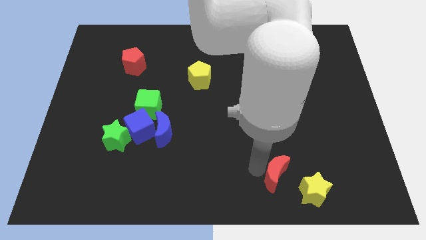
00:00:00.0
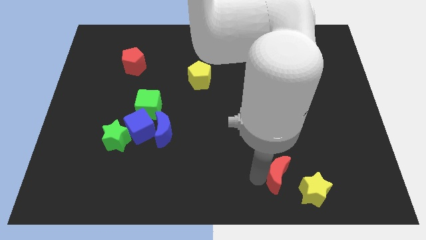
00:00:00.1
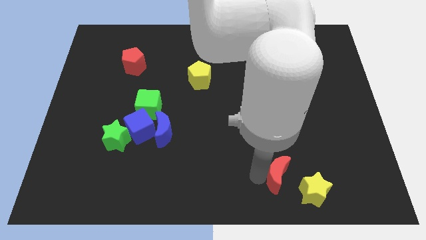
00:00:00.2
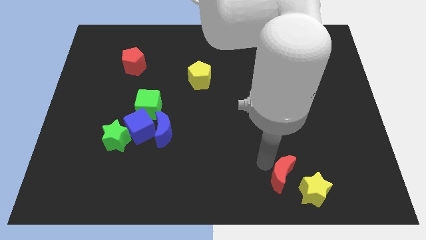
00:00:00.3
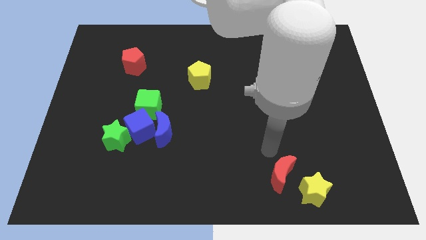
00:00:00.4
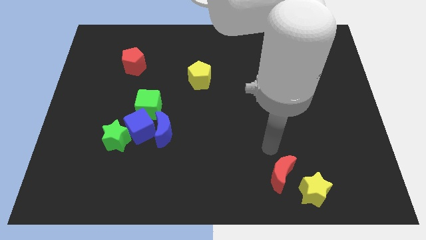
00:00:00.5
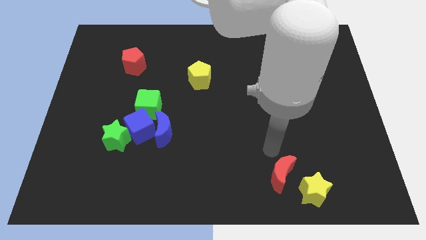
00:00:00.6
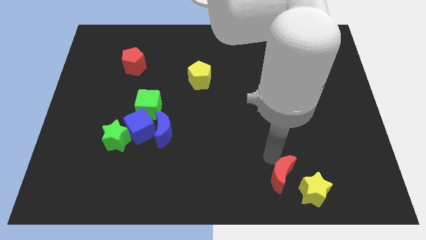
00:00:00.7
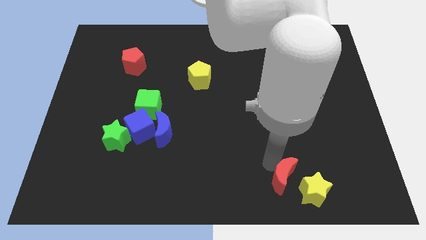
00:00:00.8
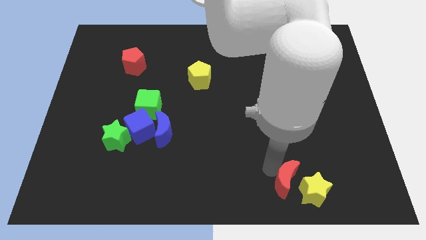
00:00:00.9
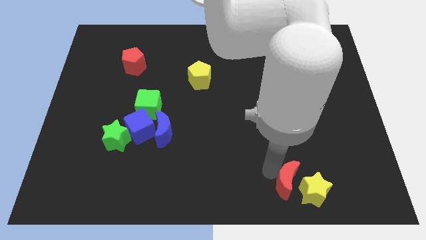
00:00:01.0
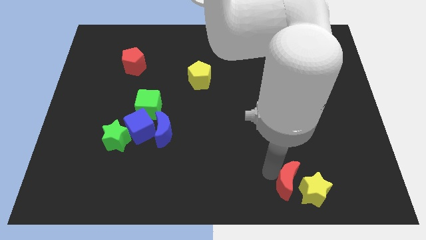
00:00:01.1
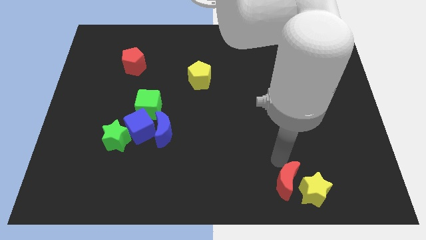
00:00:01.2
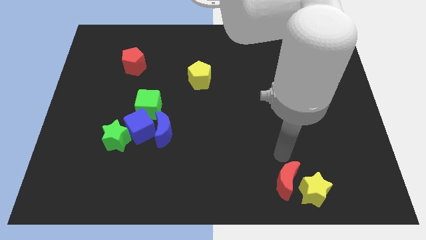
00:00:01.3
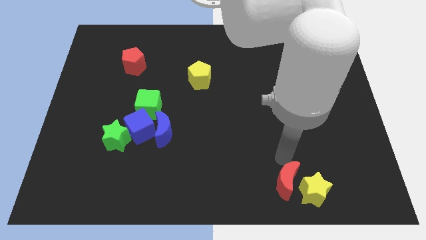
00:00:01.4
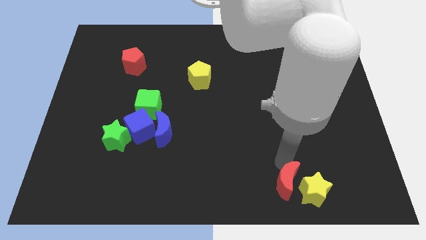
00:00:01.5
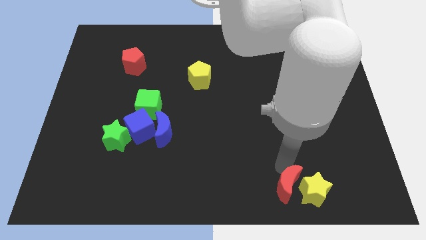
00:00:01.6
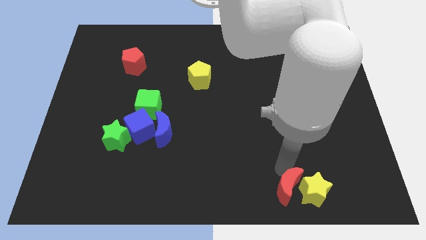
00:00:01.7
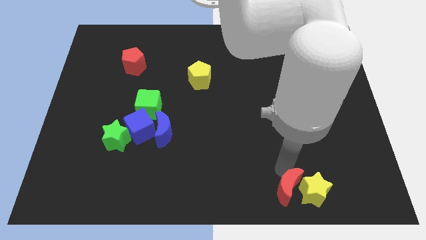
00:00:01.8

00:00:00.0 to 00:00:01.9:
move the red crescent to the left of the yellow star

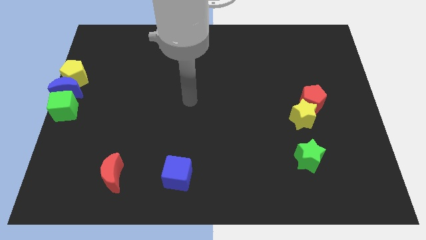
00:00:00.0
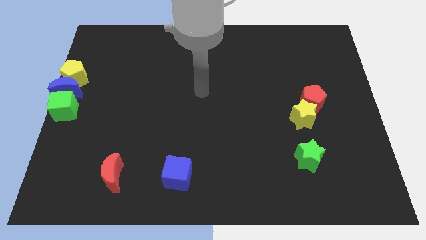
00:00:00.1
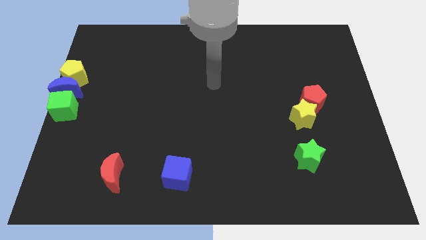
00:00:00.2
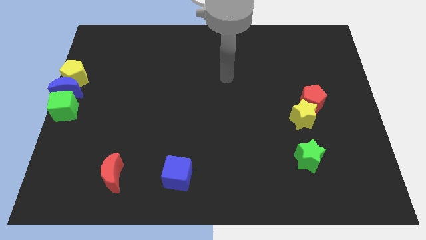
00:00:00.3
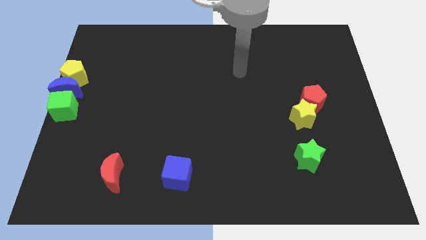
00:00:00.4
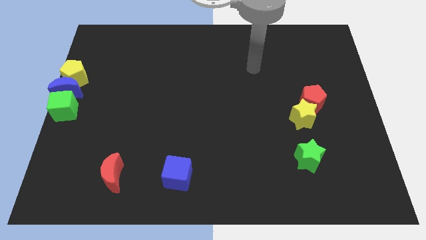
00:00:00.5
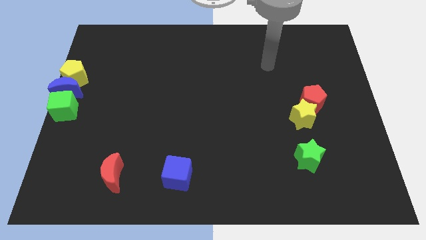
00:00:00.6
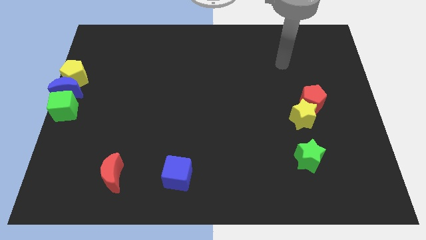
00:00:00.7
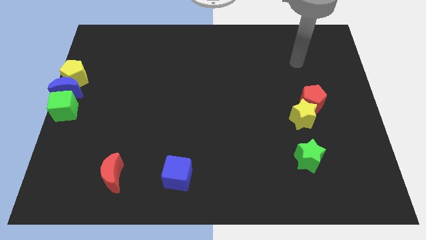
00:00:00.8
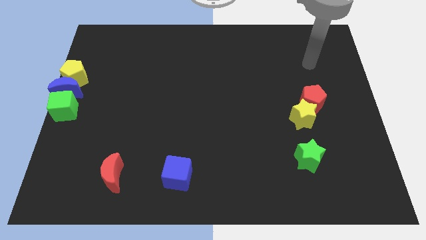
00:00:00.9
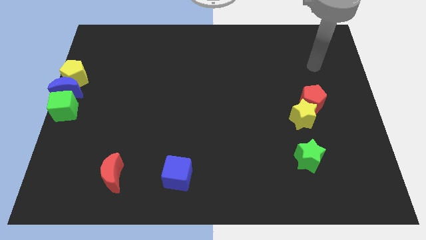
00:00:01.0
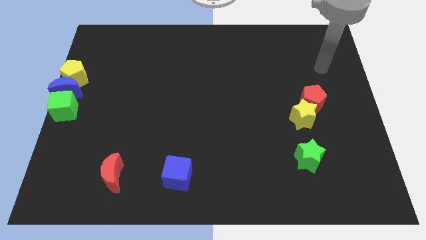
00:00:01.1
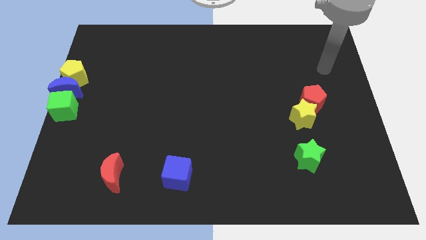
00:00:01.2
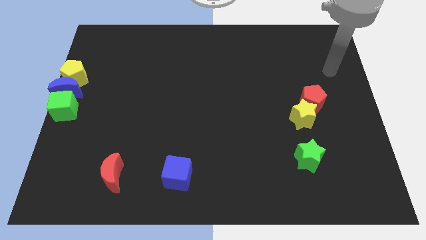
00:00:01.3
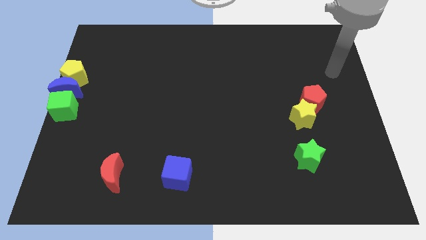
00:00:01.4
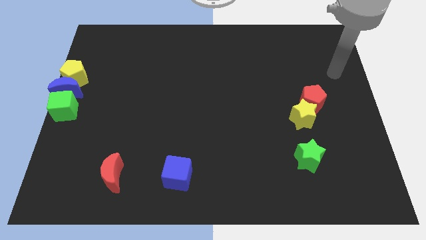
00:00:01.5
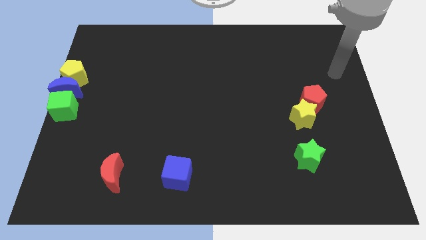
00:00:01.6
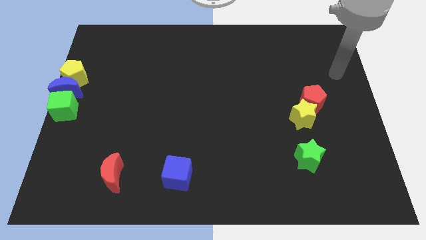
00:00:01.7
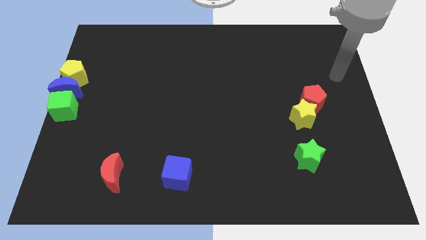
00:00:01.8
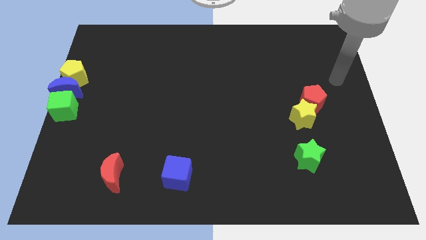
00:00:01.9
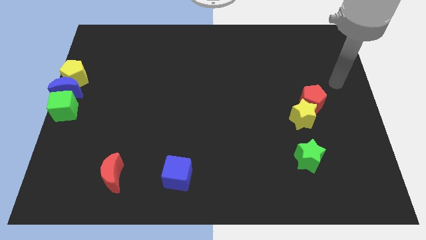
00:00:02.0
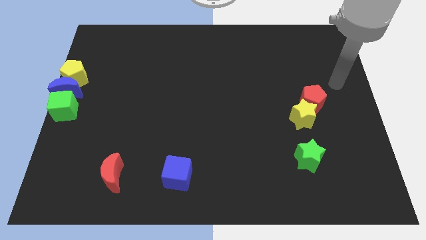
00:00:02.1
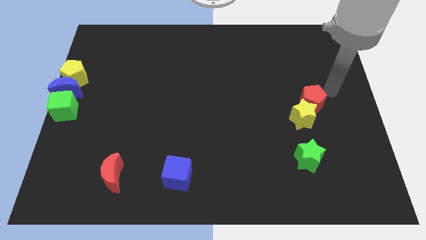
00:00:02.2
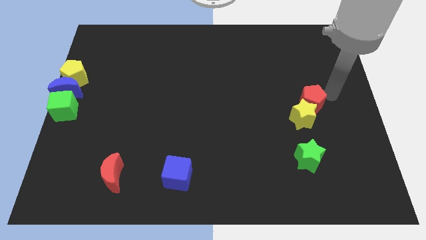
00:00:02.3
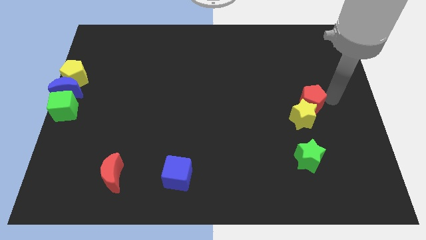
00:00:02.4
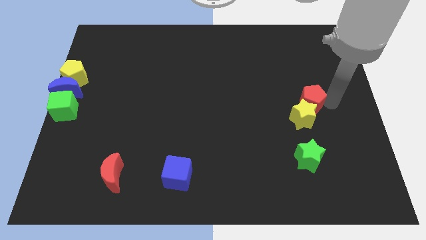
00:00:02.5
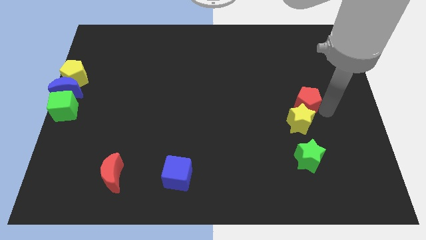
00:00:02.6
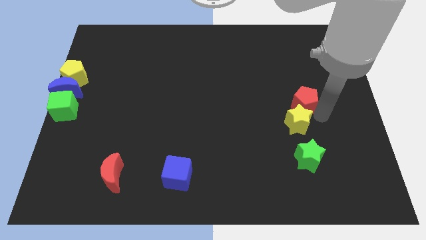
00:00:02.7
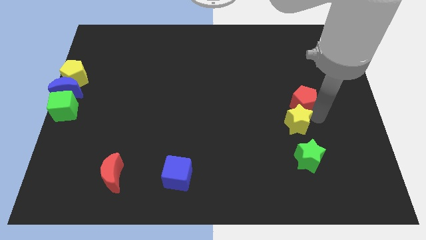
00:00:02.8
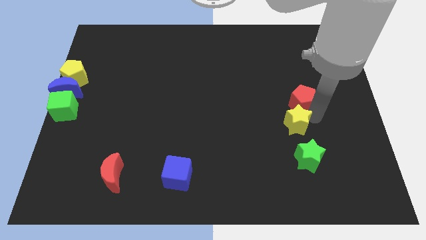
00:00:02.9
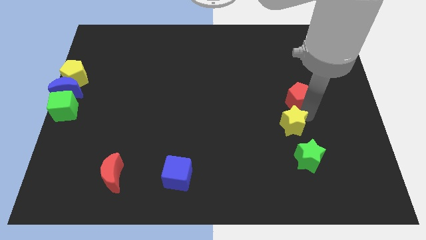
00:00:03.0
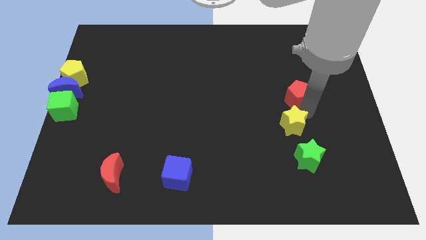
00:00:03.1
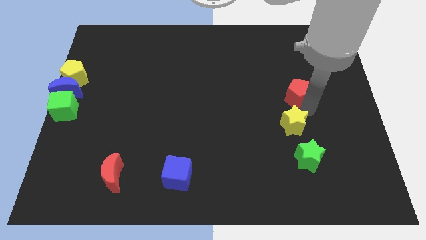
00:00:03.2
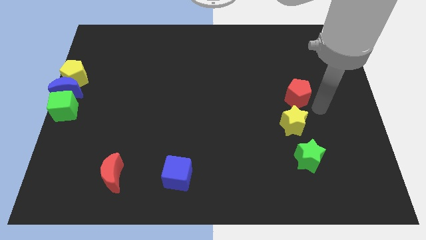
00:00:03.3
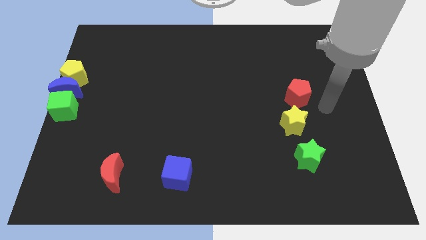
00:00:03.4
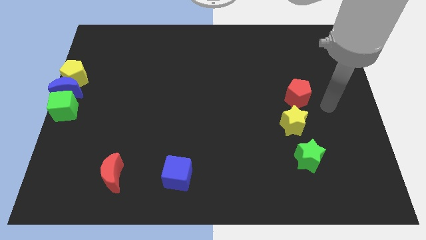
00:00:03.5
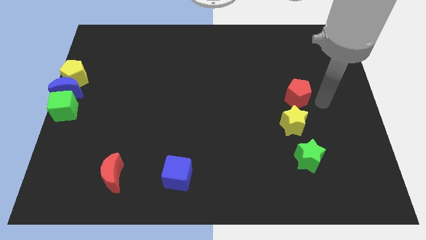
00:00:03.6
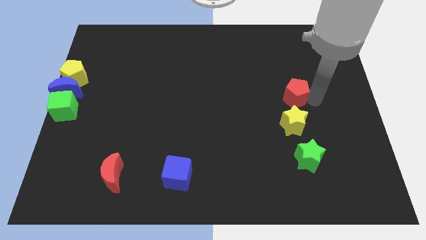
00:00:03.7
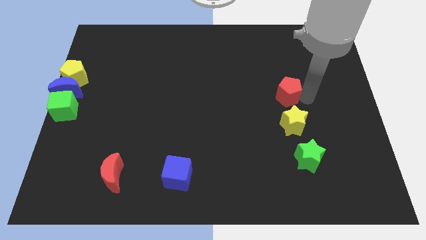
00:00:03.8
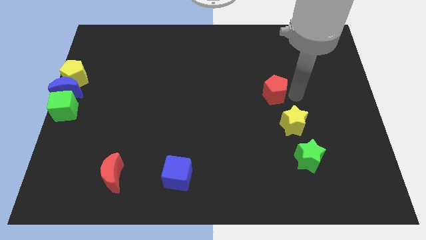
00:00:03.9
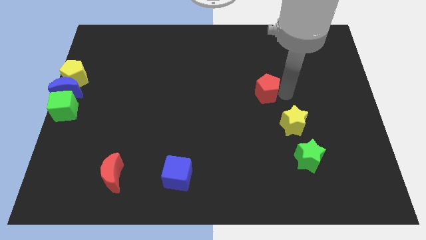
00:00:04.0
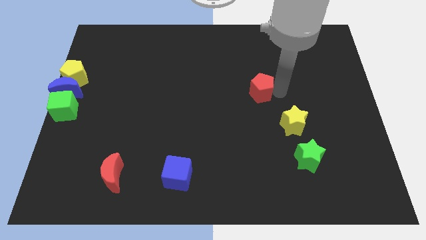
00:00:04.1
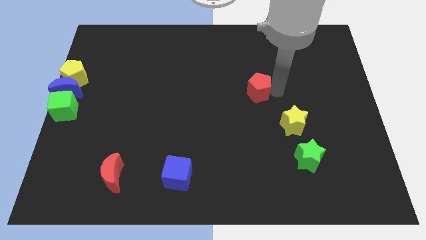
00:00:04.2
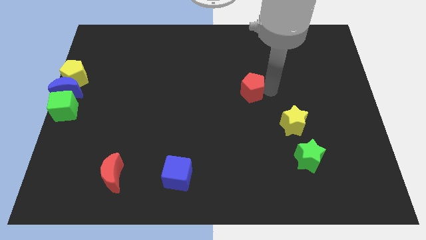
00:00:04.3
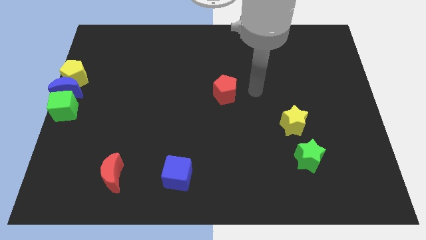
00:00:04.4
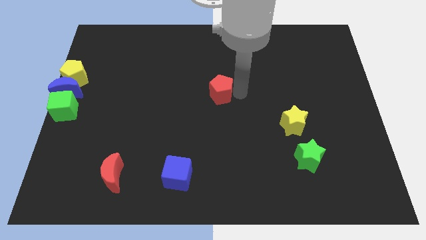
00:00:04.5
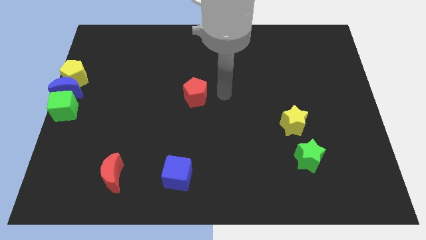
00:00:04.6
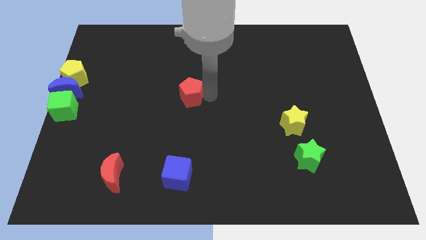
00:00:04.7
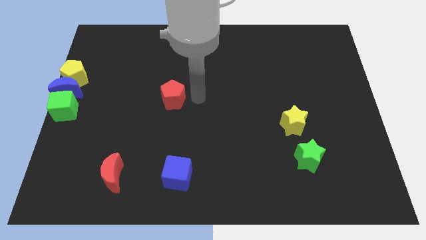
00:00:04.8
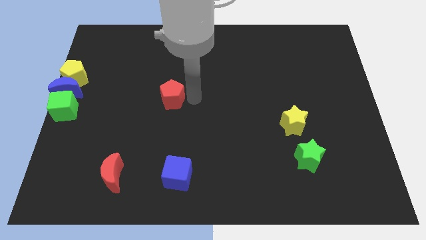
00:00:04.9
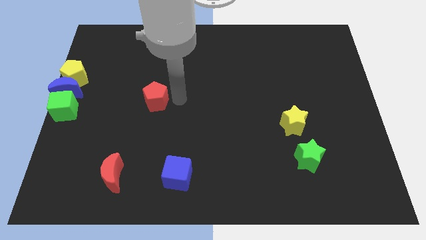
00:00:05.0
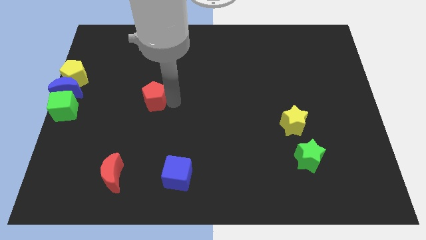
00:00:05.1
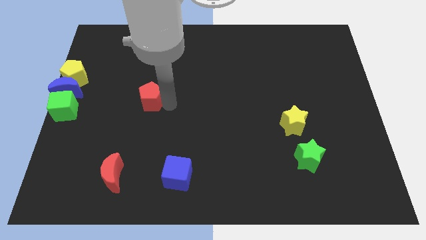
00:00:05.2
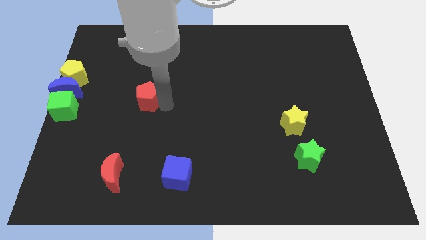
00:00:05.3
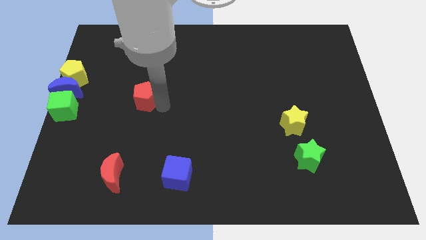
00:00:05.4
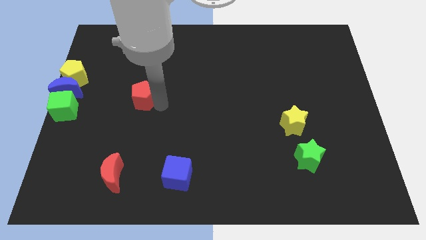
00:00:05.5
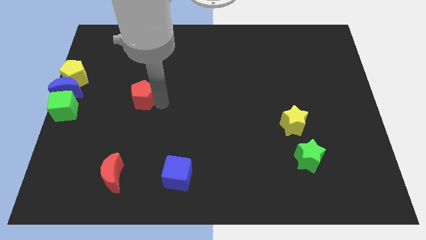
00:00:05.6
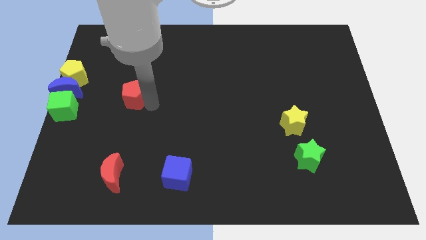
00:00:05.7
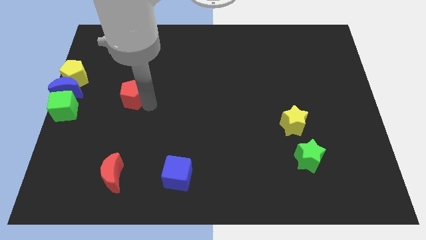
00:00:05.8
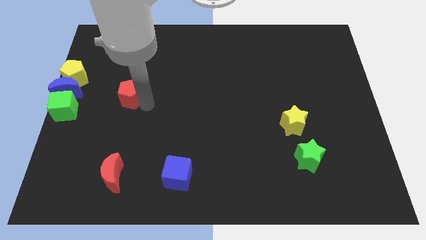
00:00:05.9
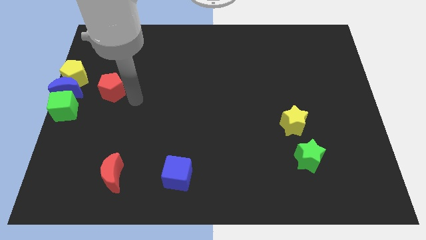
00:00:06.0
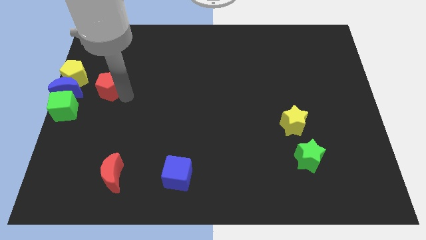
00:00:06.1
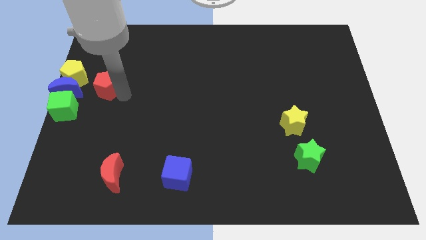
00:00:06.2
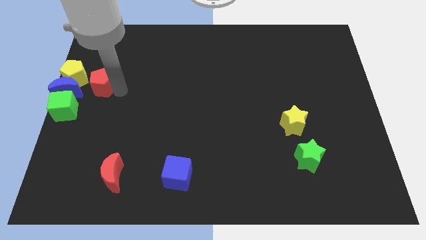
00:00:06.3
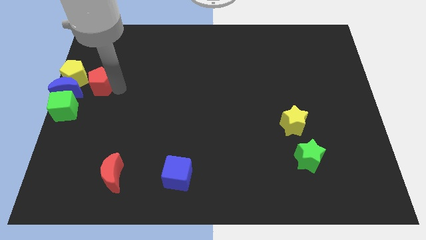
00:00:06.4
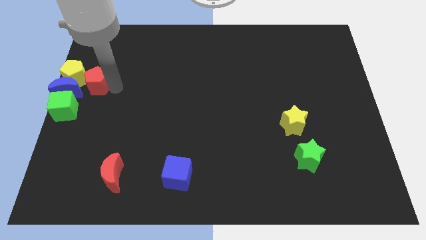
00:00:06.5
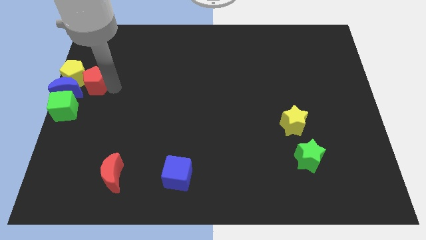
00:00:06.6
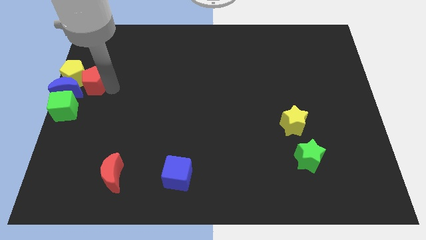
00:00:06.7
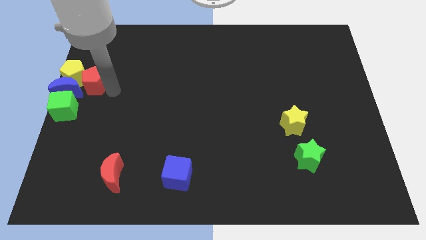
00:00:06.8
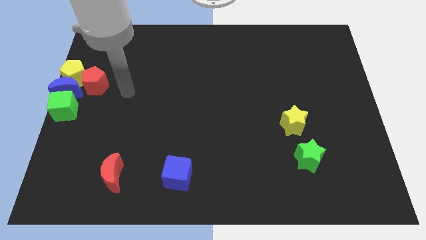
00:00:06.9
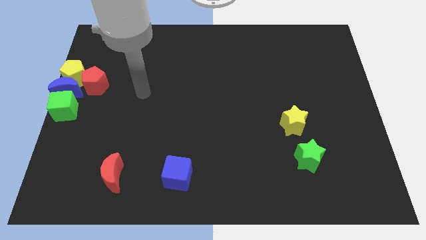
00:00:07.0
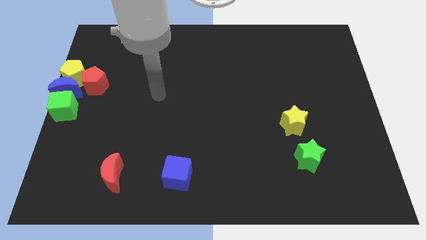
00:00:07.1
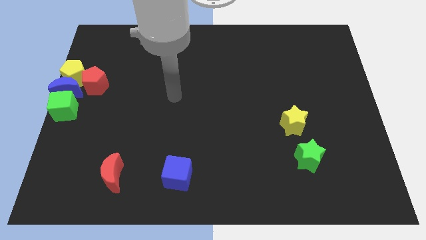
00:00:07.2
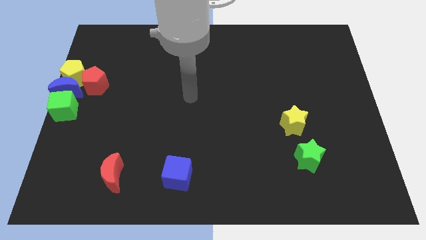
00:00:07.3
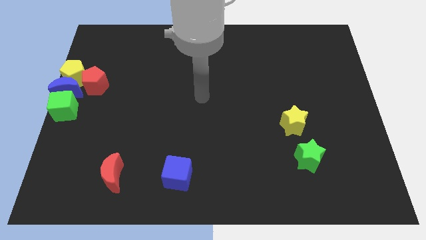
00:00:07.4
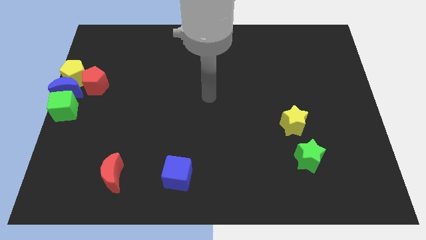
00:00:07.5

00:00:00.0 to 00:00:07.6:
place the red pentagon to the right side of the yellow pentagon
